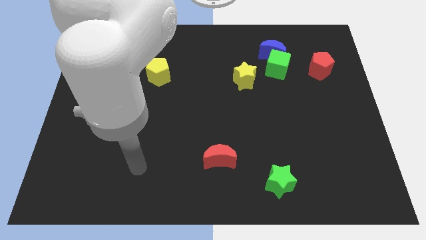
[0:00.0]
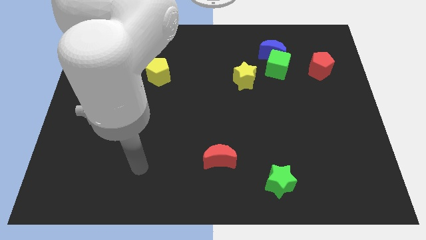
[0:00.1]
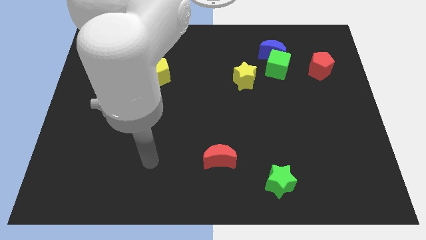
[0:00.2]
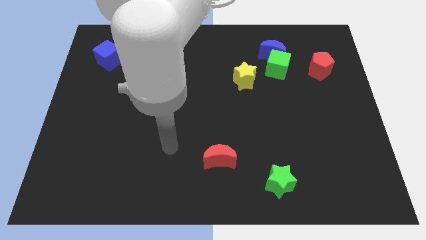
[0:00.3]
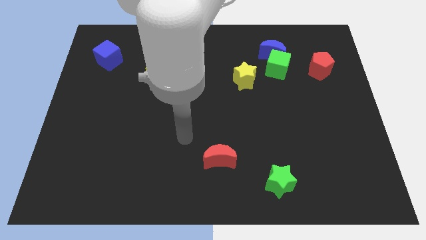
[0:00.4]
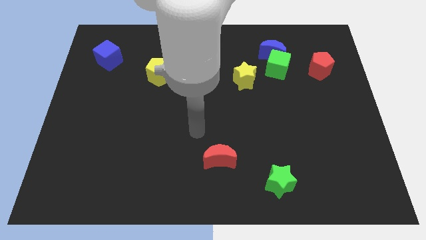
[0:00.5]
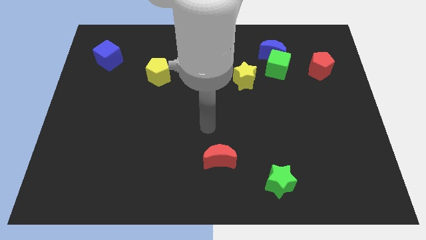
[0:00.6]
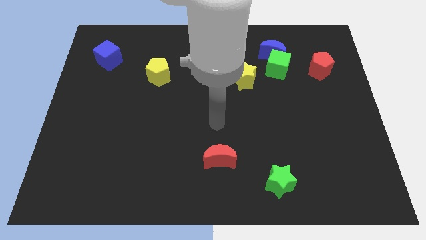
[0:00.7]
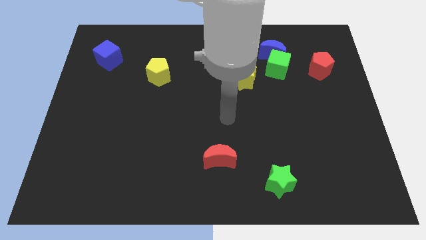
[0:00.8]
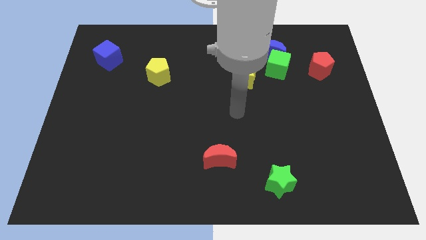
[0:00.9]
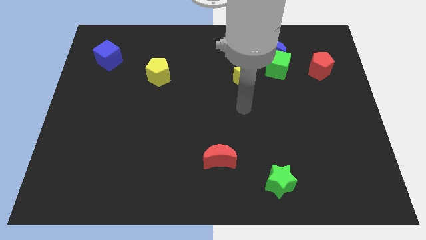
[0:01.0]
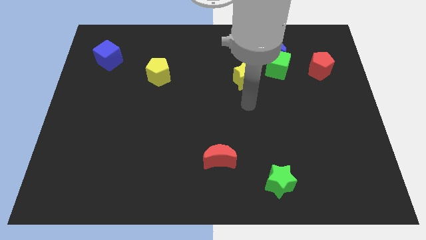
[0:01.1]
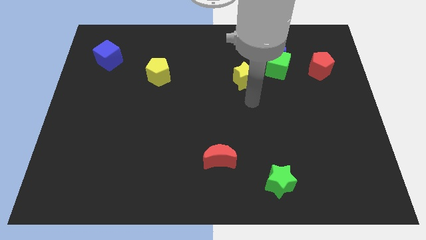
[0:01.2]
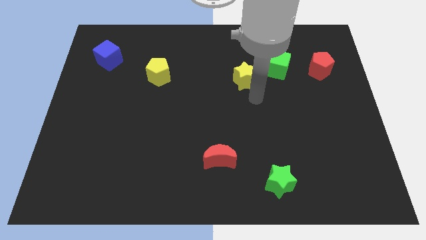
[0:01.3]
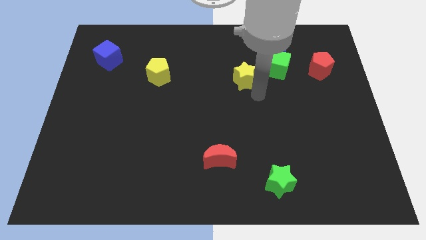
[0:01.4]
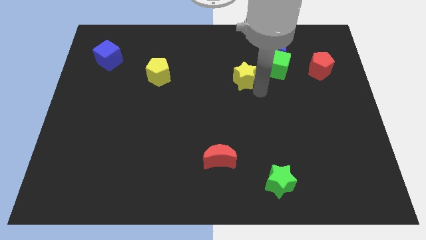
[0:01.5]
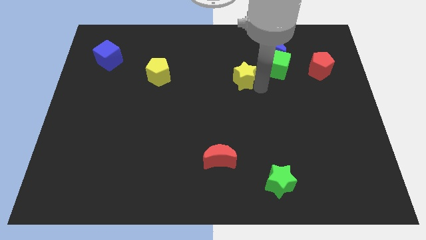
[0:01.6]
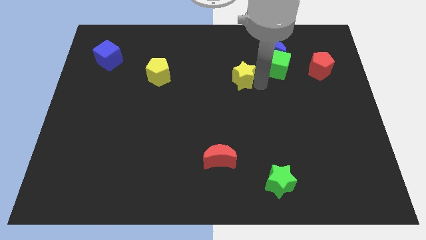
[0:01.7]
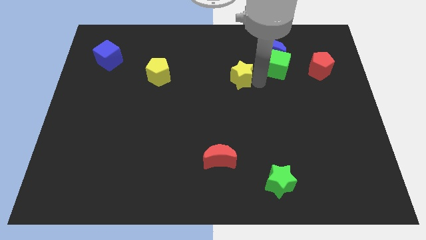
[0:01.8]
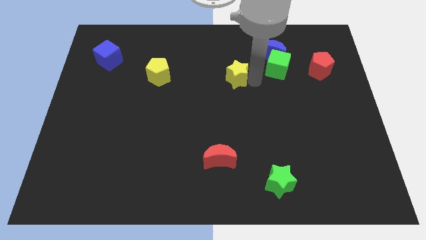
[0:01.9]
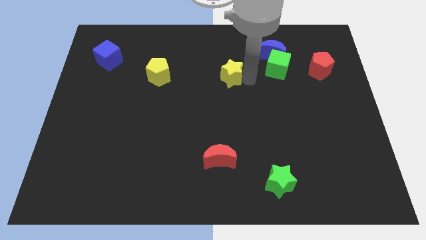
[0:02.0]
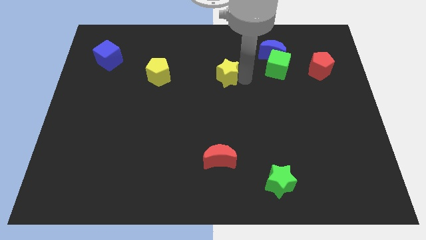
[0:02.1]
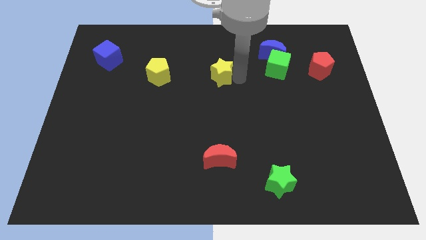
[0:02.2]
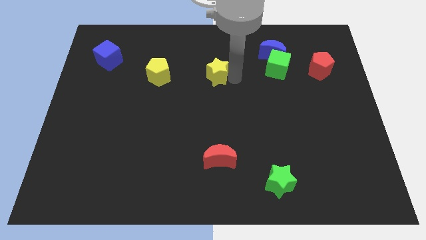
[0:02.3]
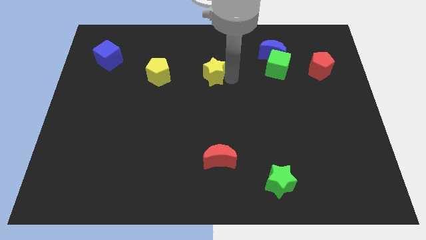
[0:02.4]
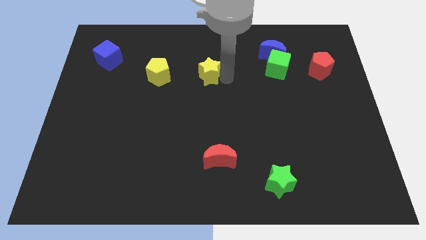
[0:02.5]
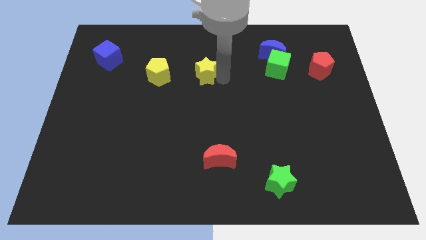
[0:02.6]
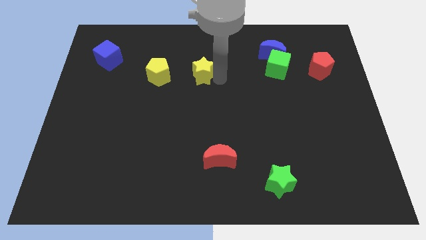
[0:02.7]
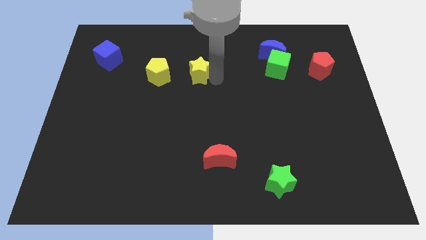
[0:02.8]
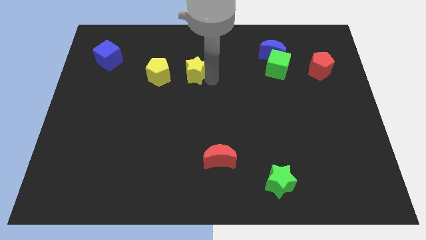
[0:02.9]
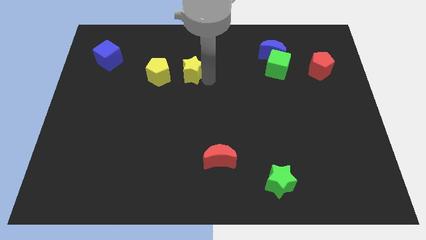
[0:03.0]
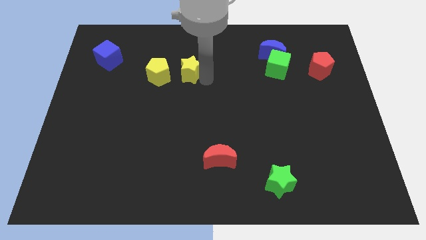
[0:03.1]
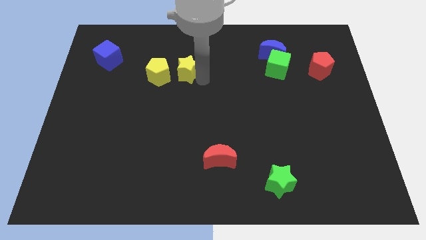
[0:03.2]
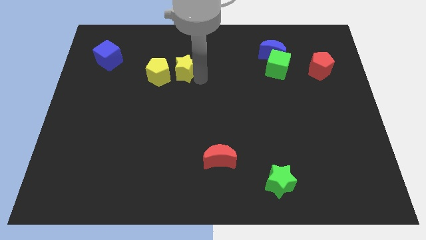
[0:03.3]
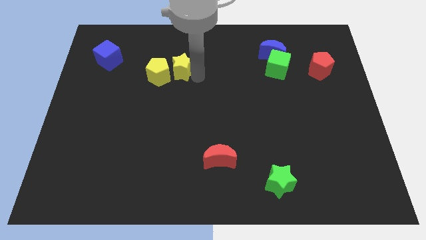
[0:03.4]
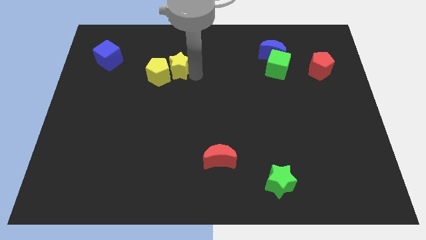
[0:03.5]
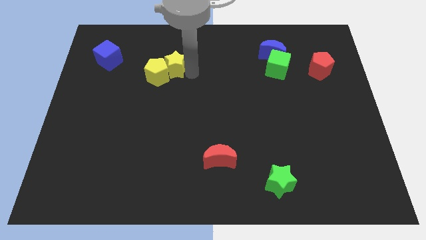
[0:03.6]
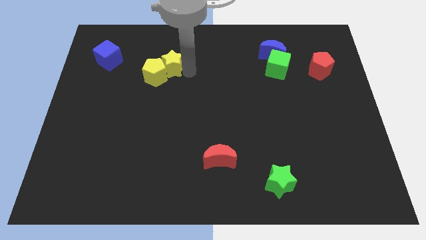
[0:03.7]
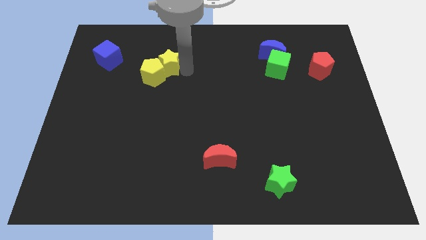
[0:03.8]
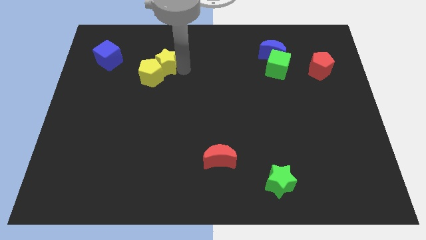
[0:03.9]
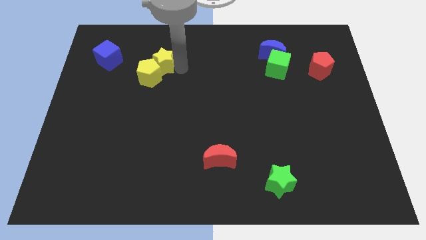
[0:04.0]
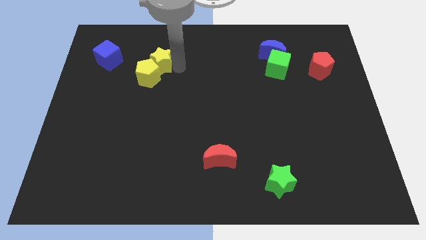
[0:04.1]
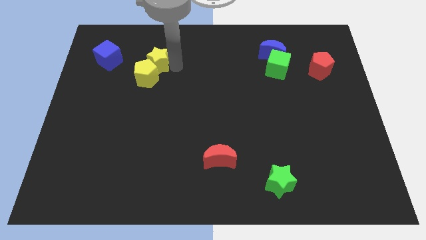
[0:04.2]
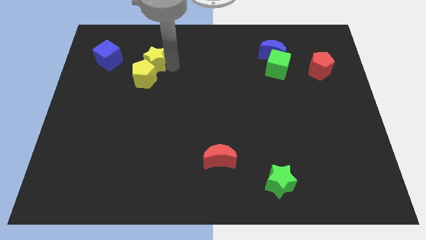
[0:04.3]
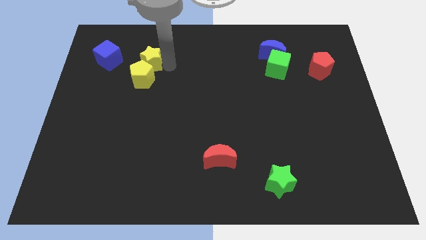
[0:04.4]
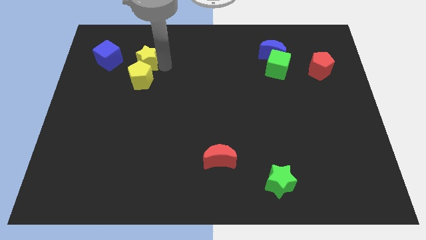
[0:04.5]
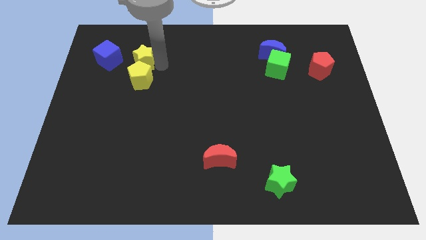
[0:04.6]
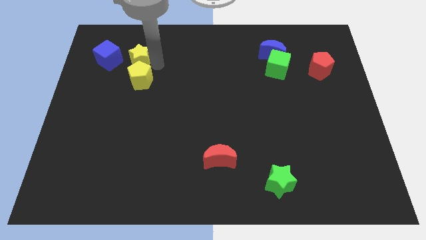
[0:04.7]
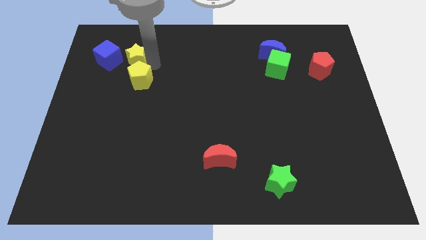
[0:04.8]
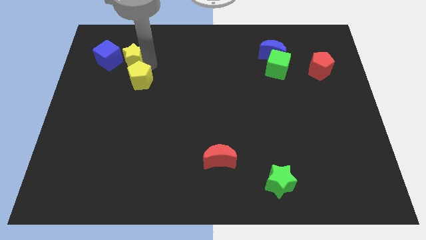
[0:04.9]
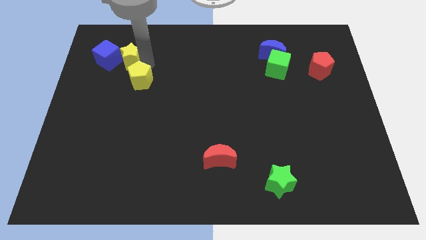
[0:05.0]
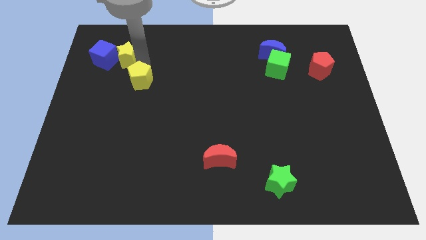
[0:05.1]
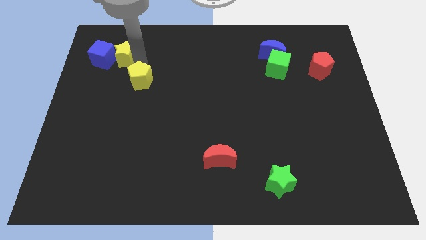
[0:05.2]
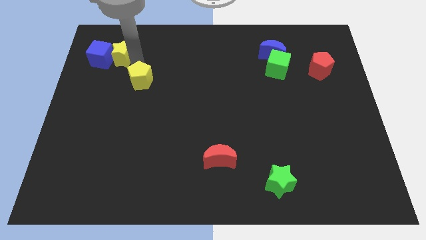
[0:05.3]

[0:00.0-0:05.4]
put the yellow star to the blue cube

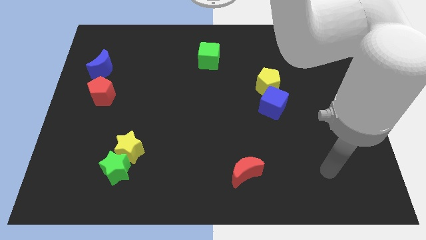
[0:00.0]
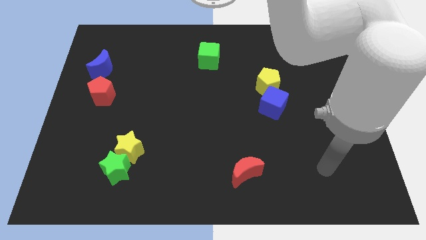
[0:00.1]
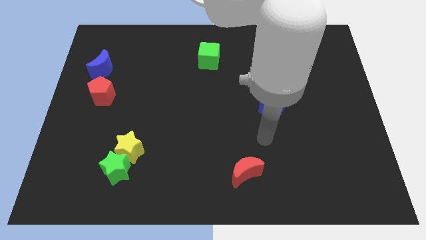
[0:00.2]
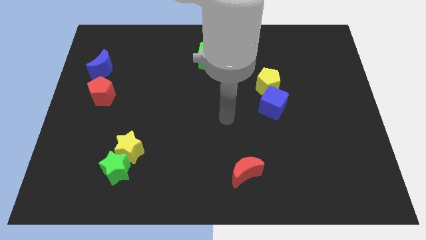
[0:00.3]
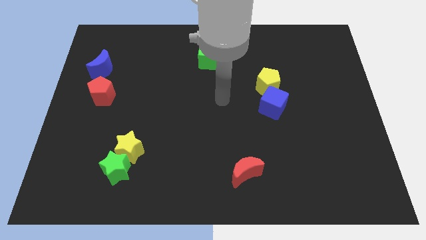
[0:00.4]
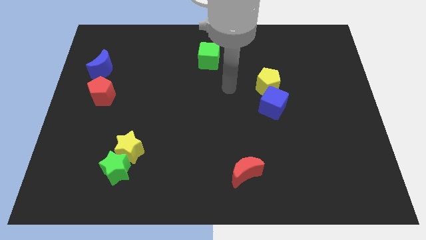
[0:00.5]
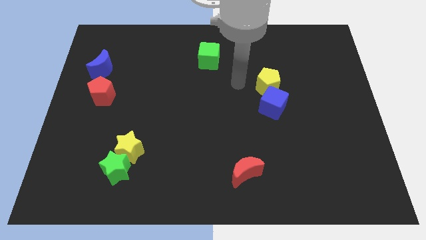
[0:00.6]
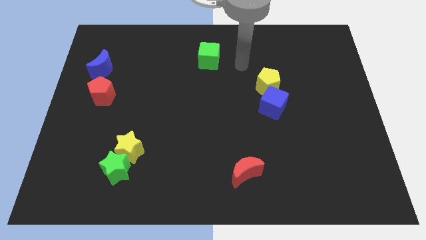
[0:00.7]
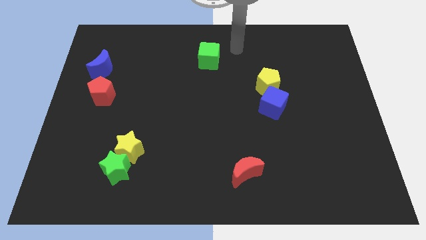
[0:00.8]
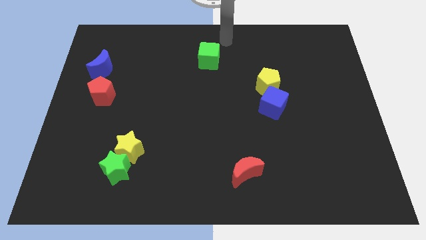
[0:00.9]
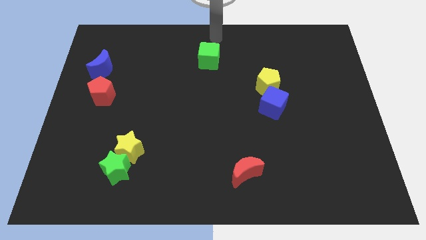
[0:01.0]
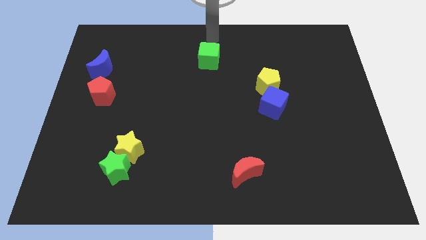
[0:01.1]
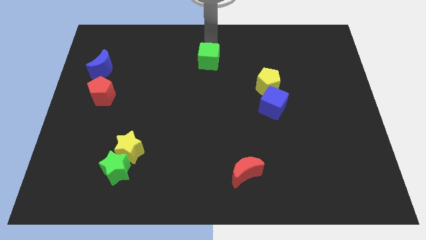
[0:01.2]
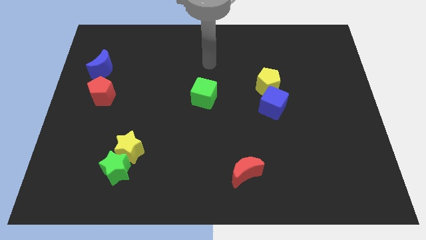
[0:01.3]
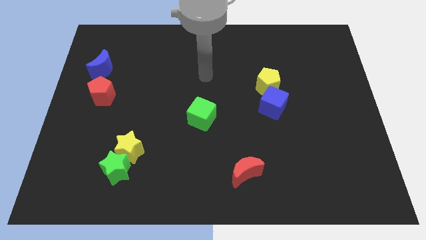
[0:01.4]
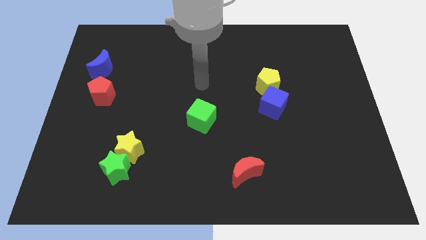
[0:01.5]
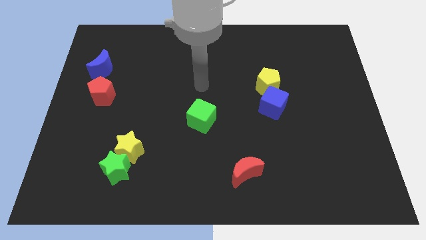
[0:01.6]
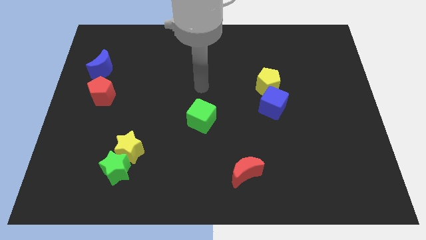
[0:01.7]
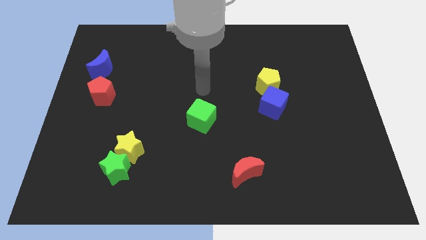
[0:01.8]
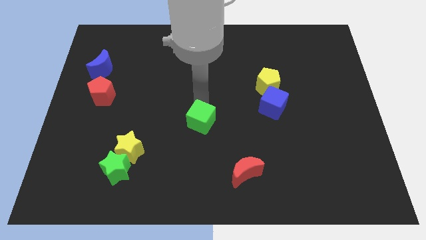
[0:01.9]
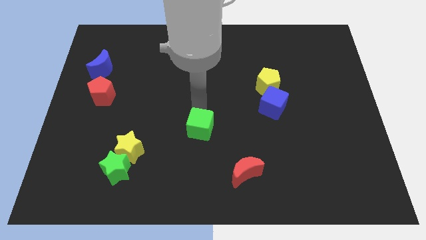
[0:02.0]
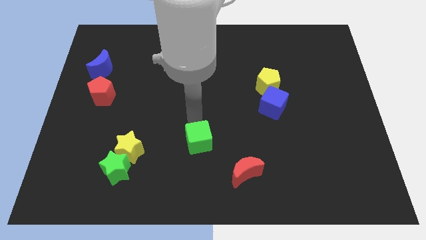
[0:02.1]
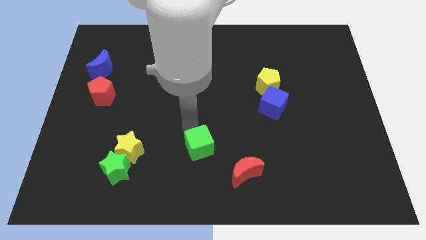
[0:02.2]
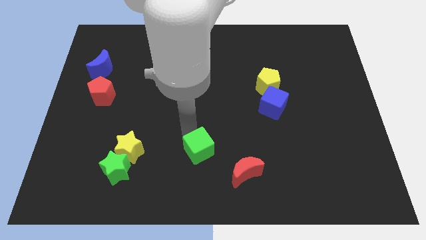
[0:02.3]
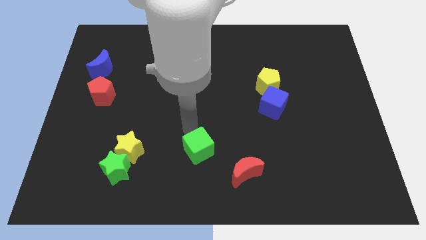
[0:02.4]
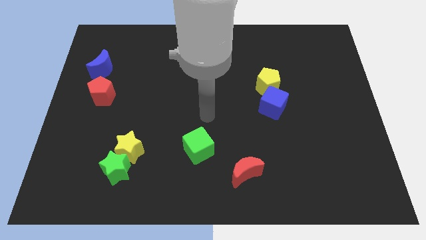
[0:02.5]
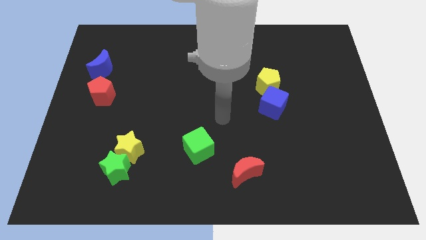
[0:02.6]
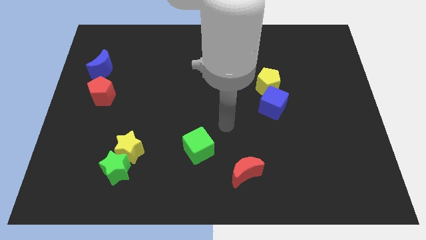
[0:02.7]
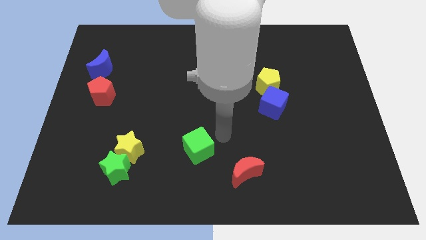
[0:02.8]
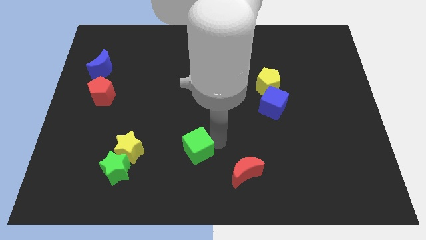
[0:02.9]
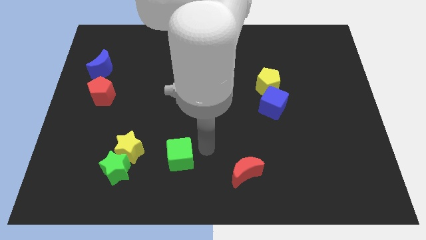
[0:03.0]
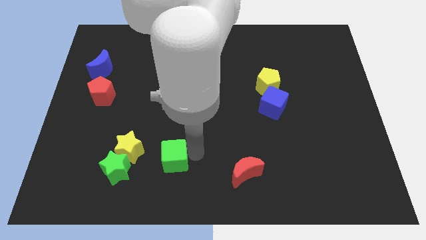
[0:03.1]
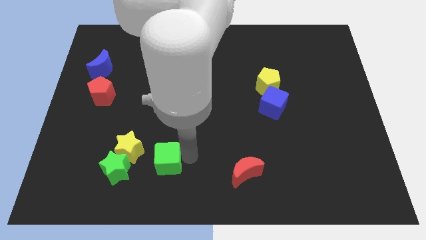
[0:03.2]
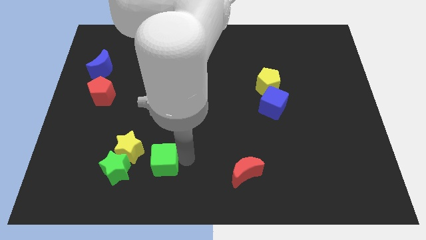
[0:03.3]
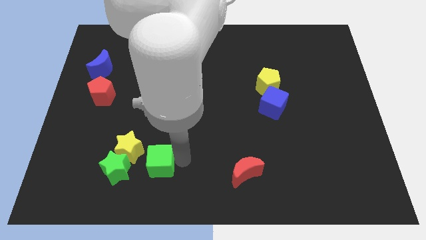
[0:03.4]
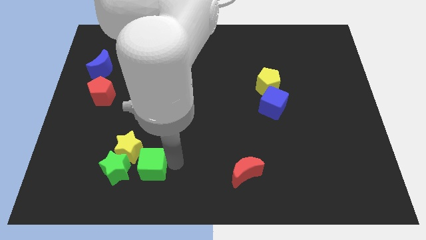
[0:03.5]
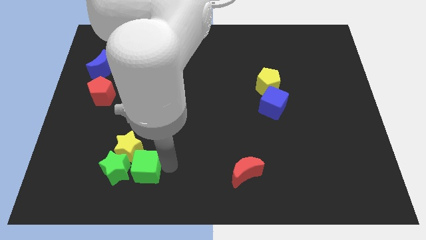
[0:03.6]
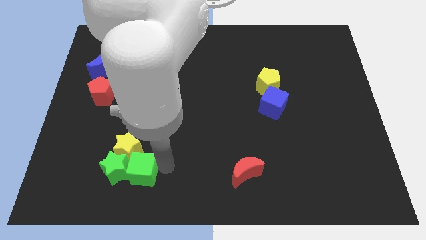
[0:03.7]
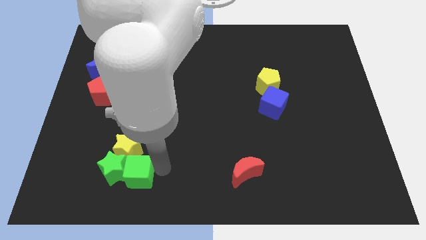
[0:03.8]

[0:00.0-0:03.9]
slide the green cube close to the green star
